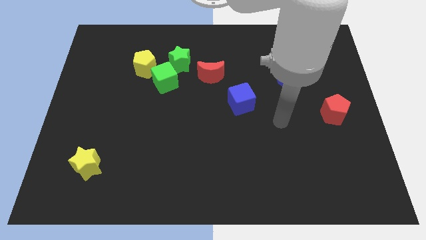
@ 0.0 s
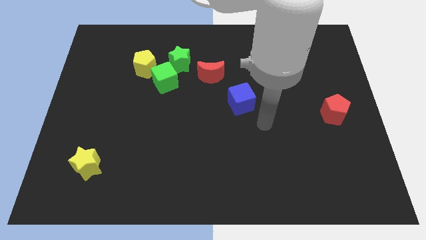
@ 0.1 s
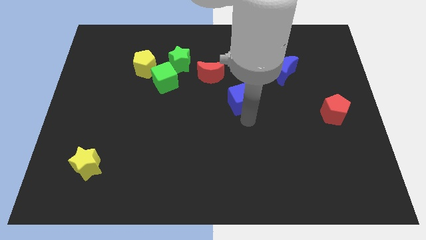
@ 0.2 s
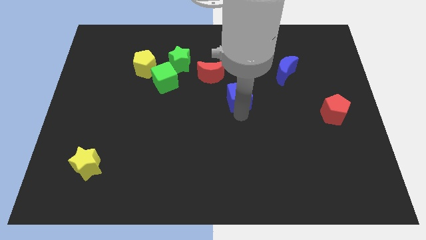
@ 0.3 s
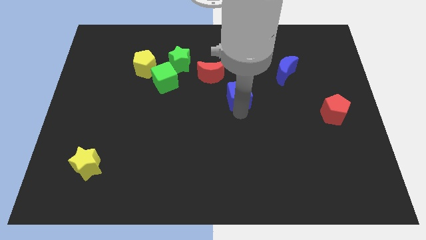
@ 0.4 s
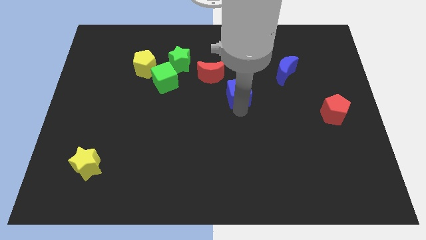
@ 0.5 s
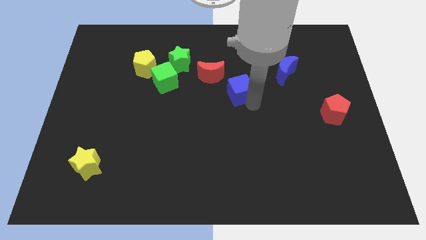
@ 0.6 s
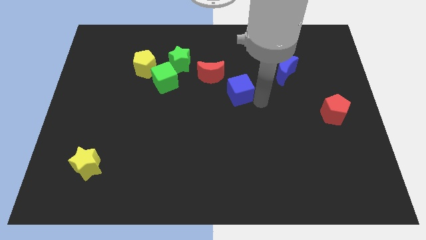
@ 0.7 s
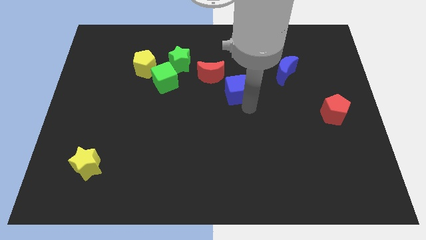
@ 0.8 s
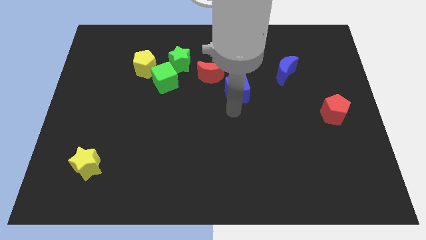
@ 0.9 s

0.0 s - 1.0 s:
push the blue cube close to the red crescent

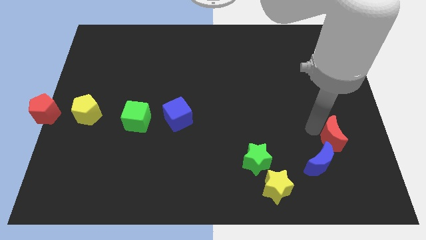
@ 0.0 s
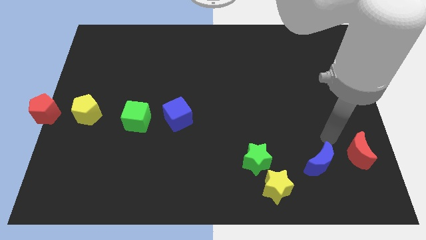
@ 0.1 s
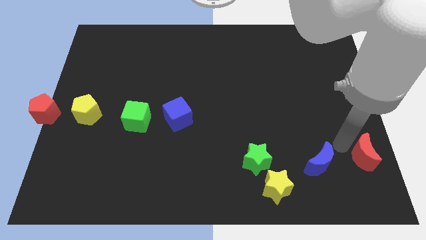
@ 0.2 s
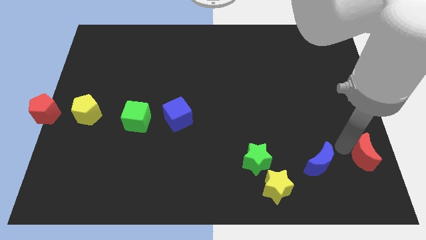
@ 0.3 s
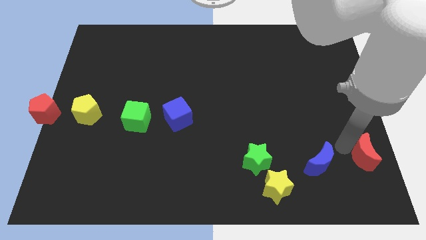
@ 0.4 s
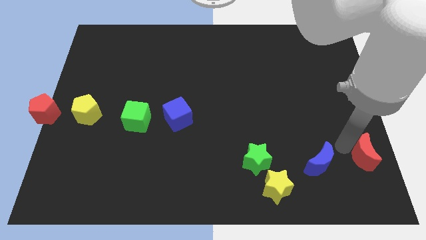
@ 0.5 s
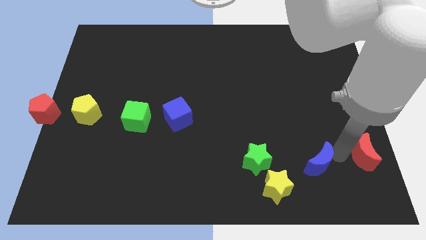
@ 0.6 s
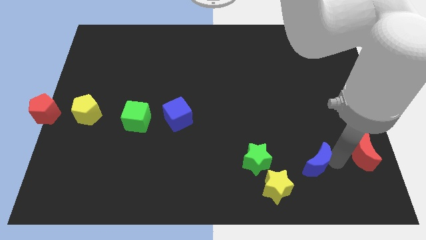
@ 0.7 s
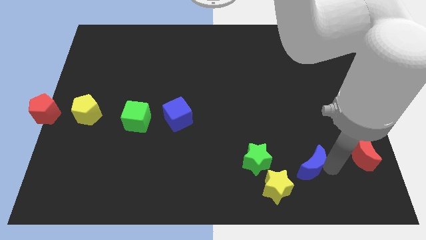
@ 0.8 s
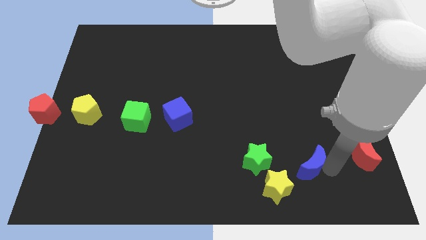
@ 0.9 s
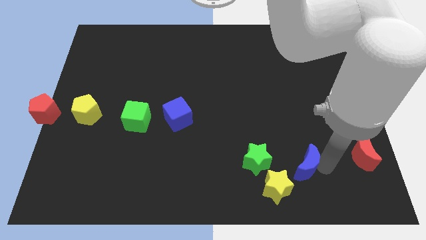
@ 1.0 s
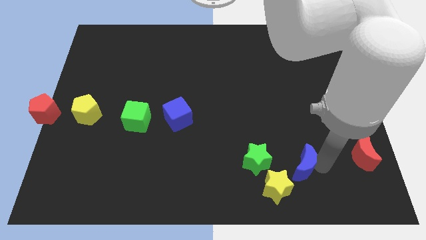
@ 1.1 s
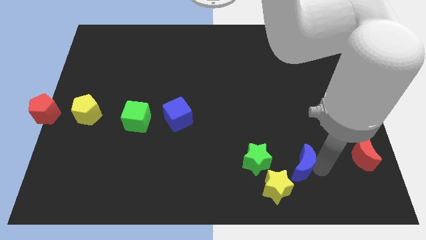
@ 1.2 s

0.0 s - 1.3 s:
separate the red moon and blue moon

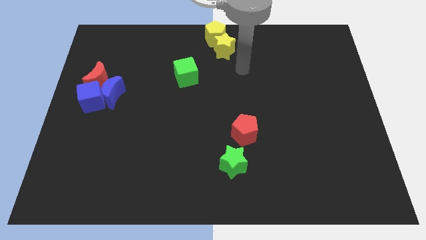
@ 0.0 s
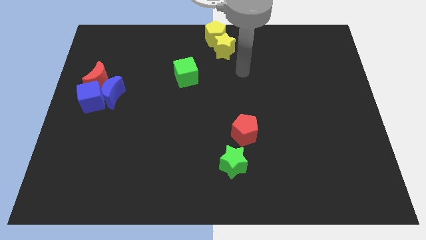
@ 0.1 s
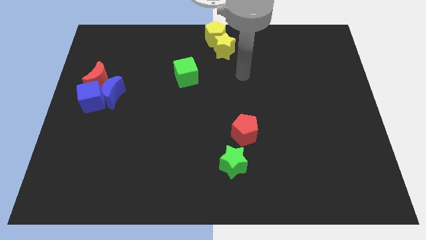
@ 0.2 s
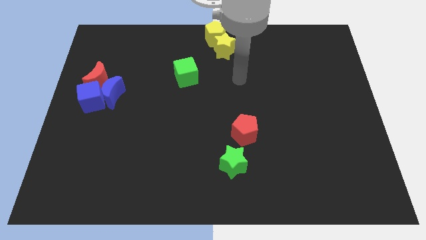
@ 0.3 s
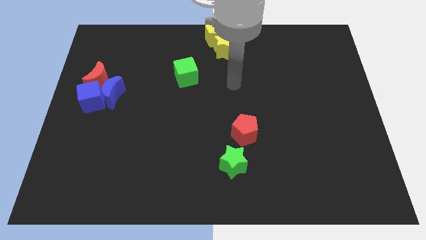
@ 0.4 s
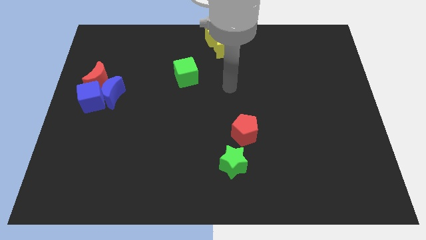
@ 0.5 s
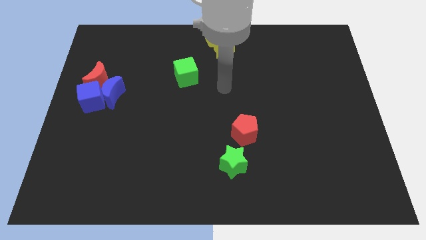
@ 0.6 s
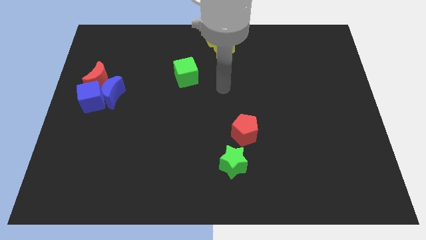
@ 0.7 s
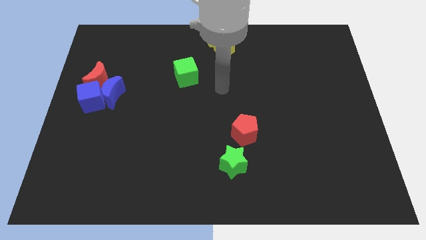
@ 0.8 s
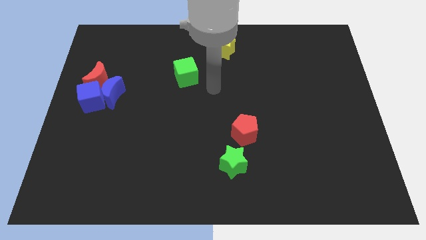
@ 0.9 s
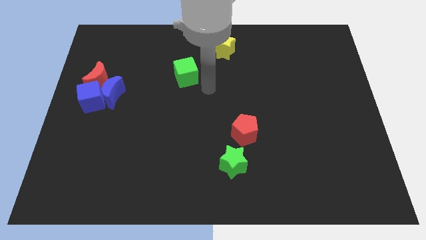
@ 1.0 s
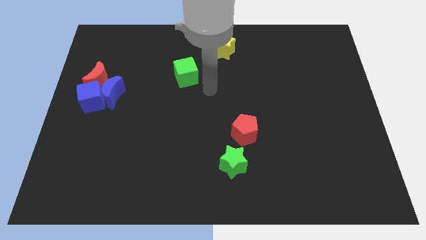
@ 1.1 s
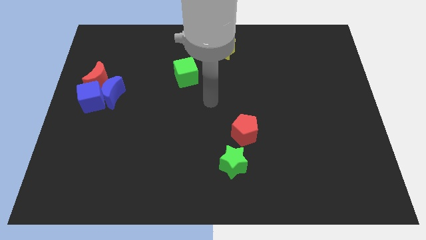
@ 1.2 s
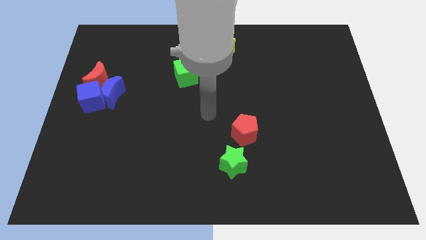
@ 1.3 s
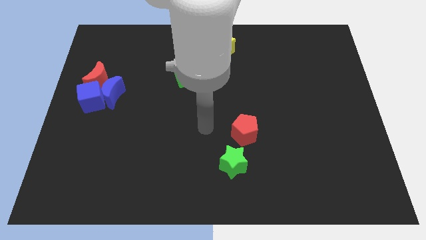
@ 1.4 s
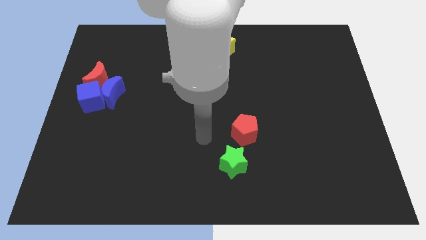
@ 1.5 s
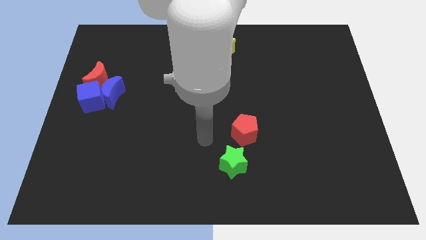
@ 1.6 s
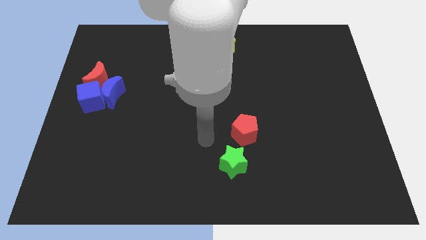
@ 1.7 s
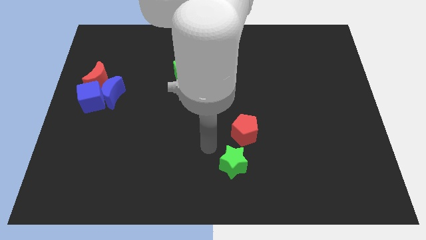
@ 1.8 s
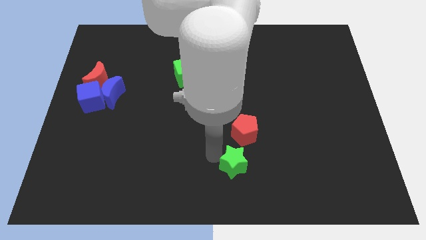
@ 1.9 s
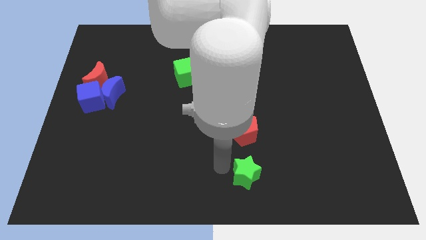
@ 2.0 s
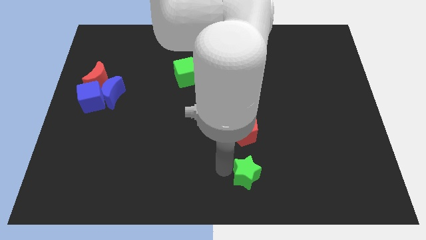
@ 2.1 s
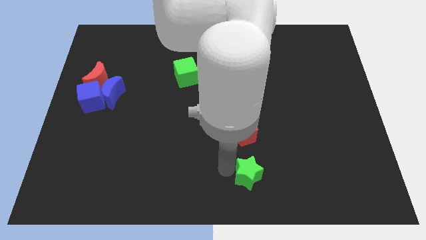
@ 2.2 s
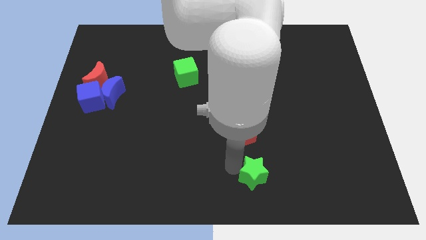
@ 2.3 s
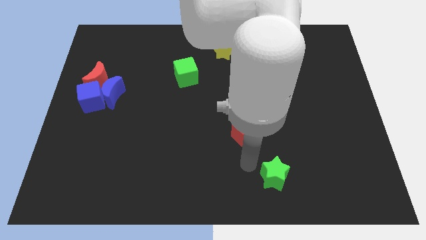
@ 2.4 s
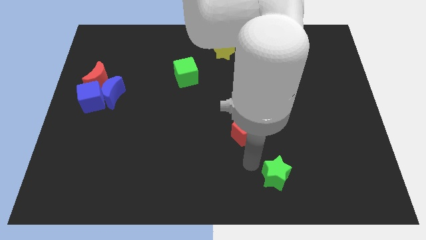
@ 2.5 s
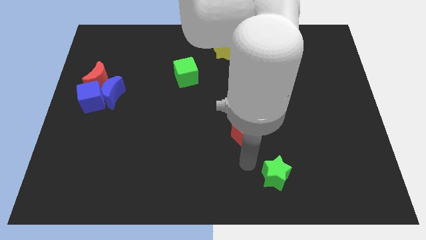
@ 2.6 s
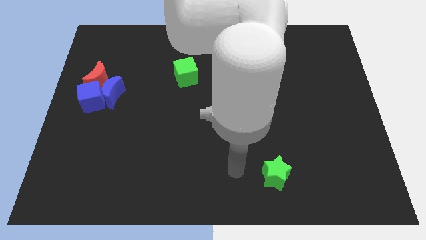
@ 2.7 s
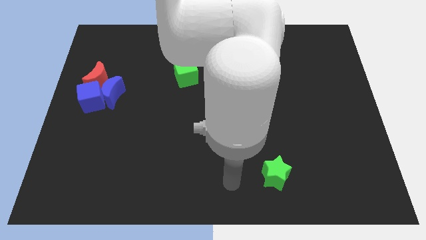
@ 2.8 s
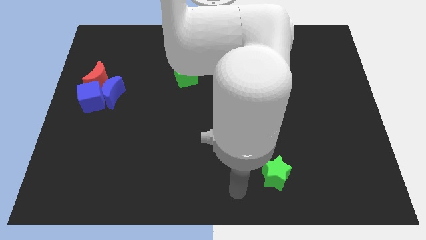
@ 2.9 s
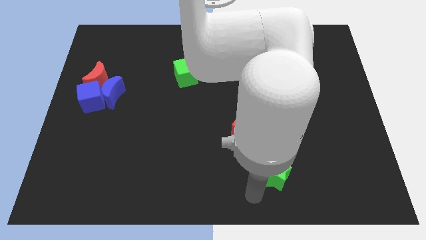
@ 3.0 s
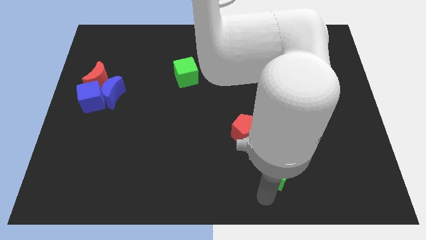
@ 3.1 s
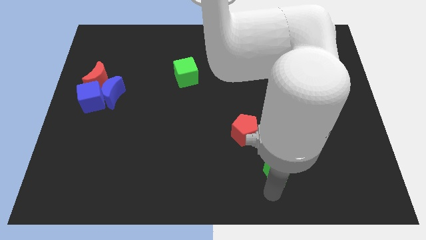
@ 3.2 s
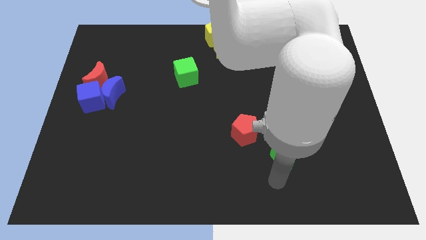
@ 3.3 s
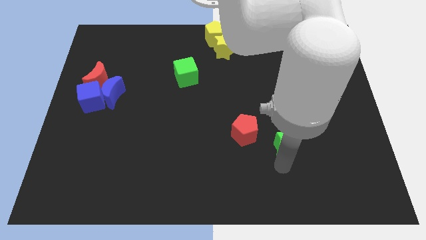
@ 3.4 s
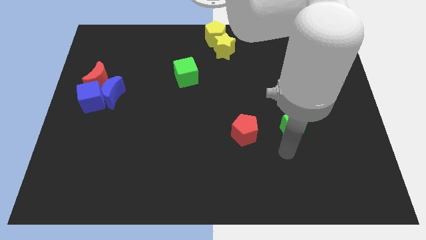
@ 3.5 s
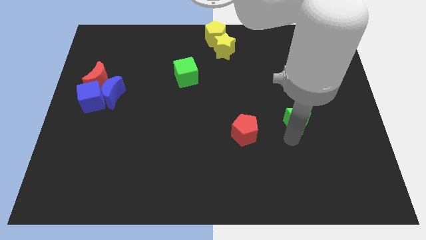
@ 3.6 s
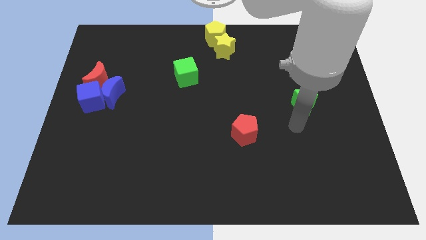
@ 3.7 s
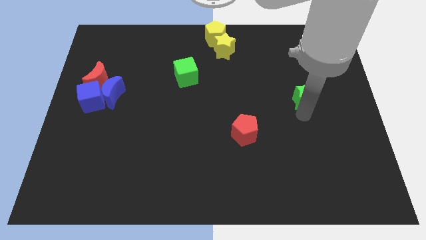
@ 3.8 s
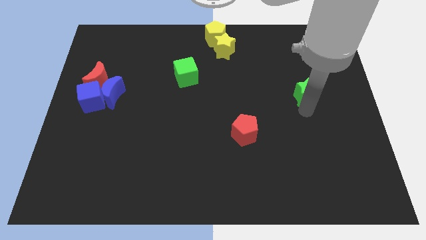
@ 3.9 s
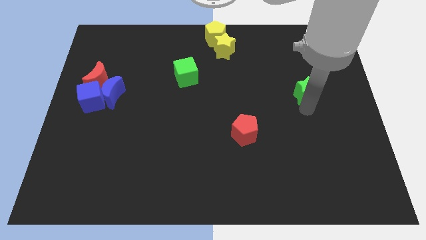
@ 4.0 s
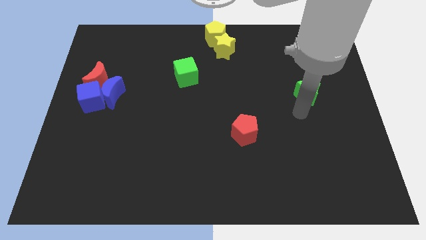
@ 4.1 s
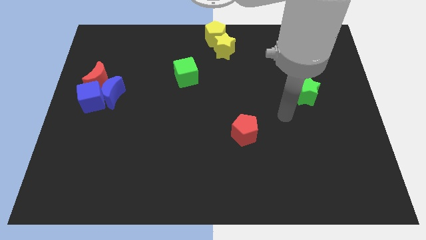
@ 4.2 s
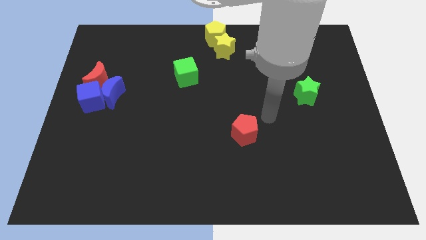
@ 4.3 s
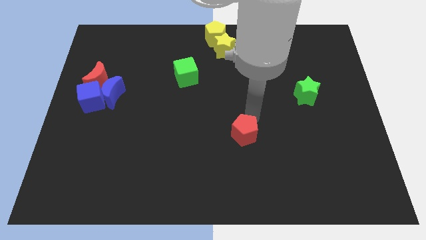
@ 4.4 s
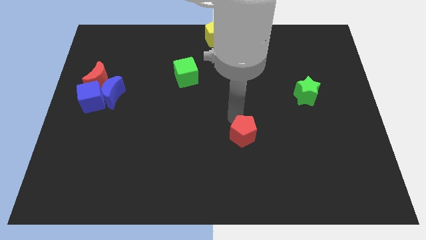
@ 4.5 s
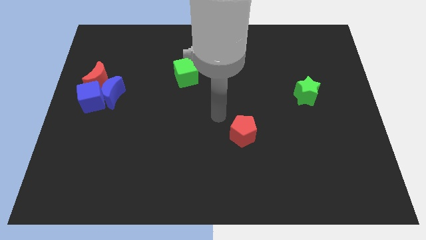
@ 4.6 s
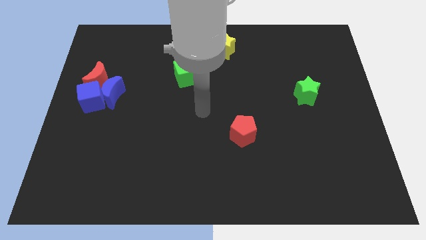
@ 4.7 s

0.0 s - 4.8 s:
move the star to the right side of the board

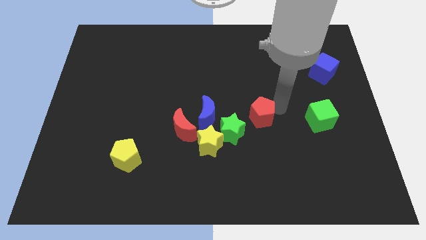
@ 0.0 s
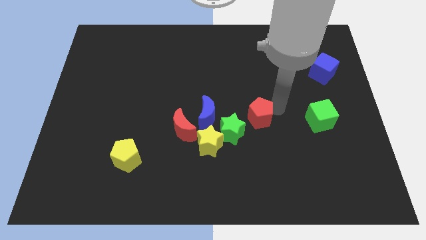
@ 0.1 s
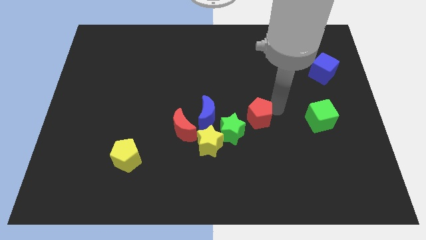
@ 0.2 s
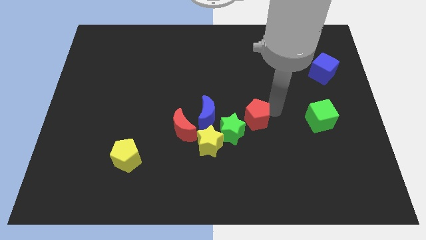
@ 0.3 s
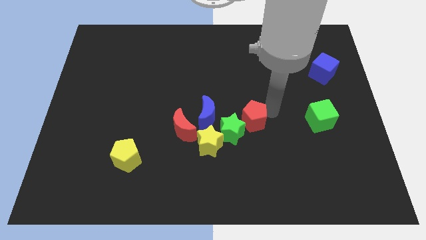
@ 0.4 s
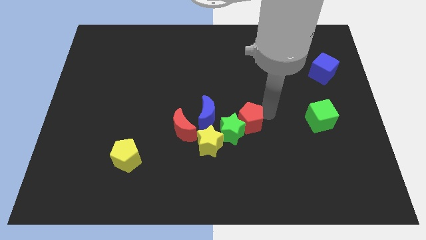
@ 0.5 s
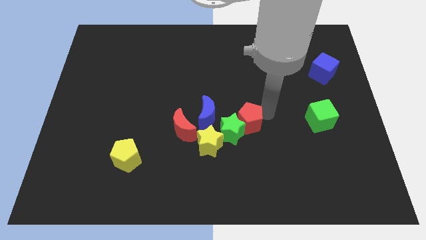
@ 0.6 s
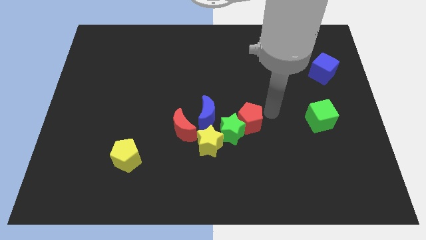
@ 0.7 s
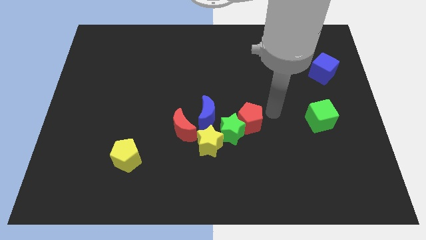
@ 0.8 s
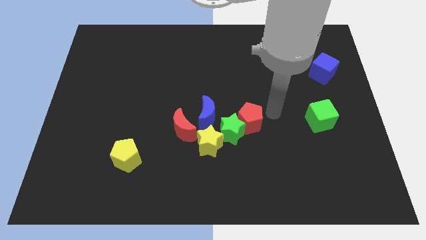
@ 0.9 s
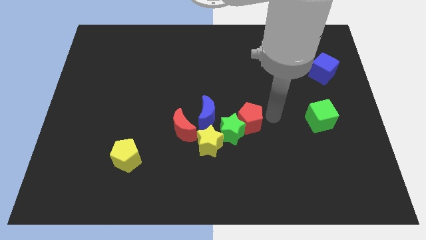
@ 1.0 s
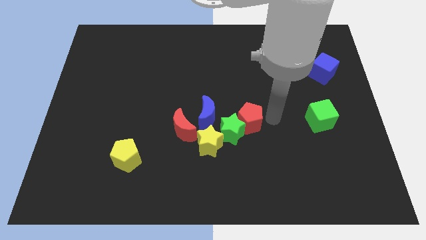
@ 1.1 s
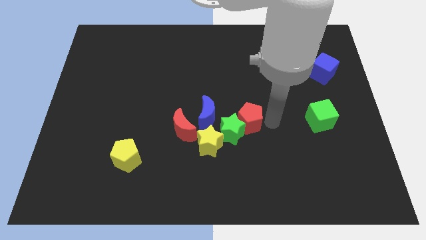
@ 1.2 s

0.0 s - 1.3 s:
push the red pentagon into the green star

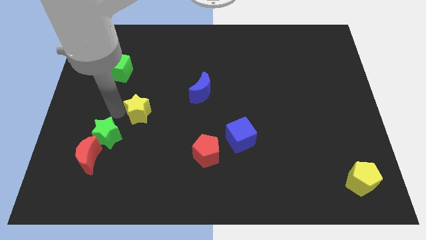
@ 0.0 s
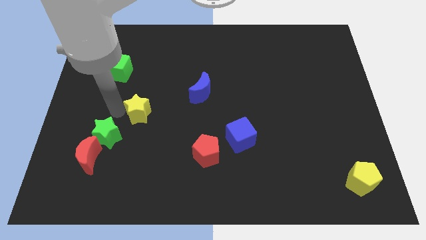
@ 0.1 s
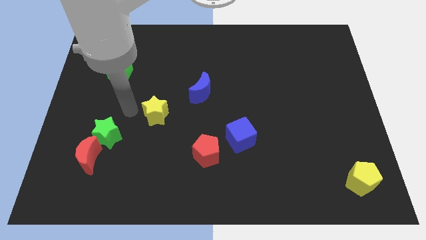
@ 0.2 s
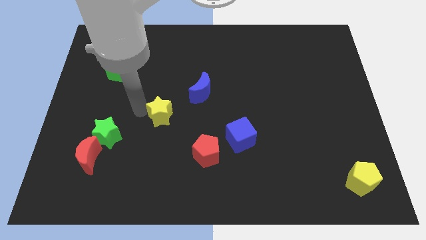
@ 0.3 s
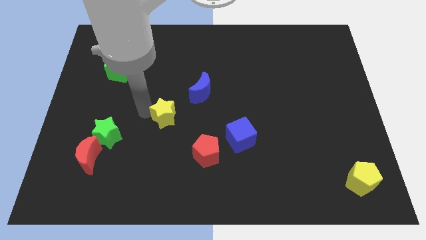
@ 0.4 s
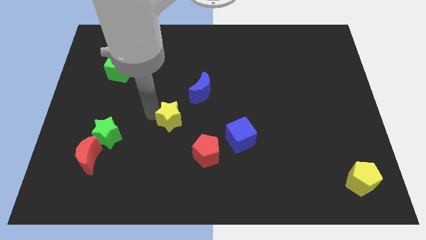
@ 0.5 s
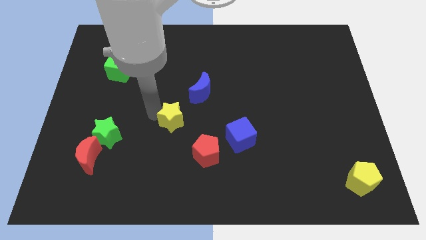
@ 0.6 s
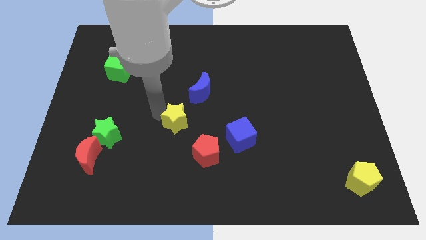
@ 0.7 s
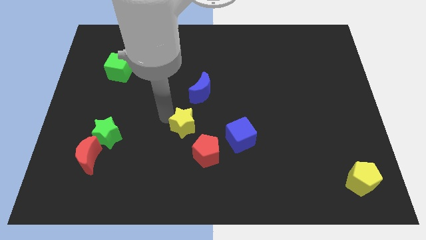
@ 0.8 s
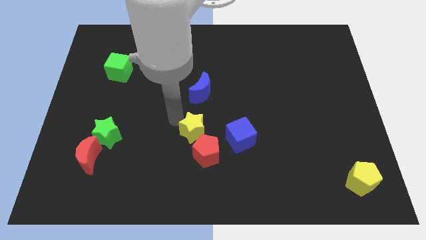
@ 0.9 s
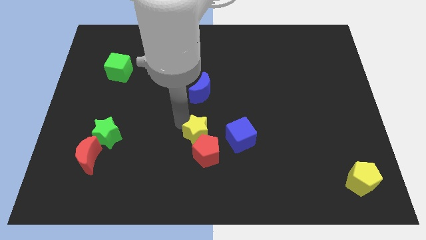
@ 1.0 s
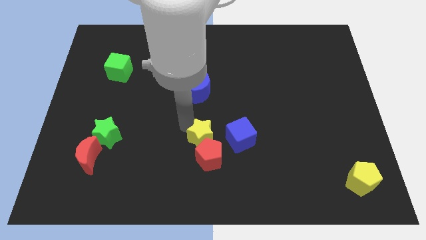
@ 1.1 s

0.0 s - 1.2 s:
place yellow star to the top left of red pentagon
